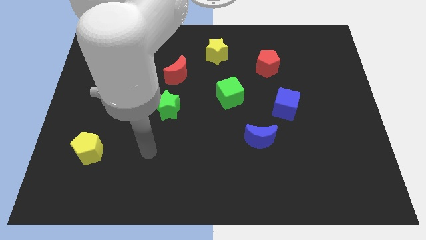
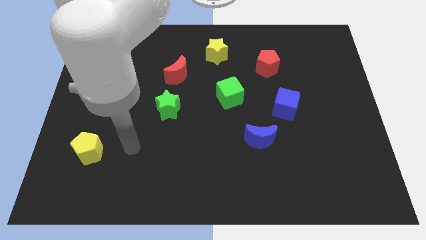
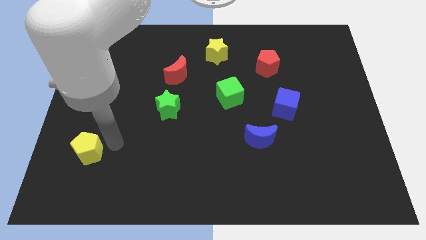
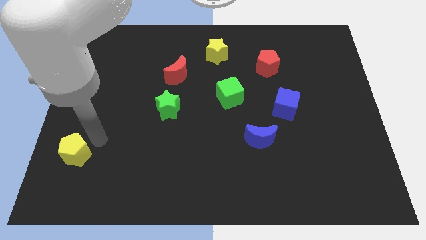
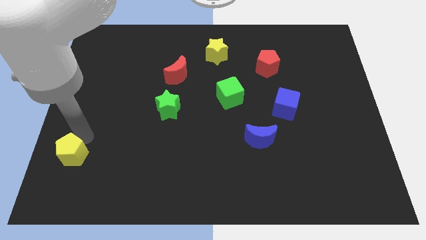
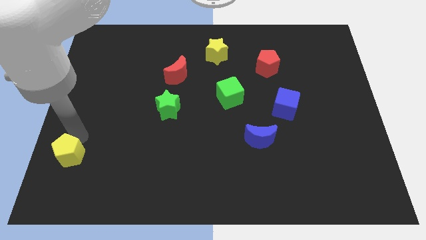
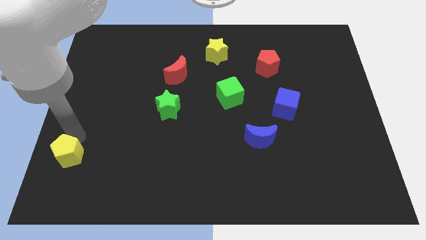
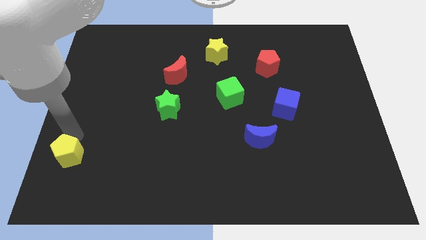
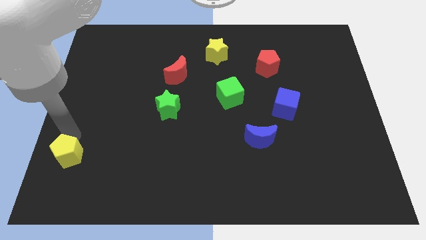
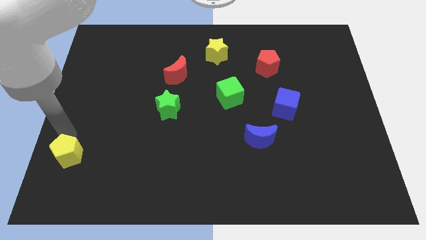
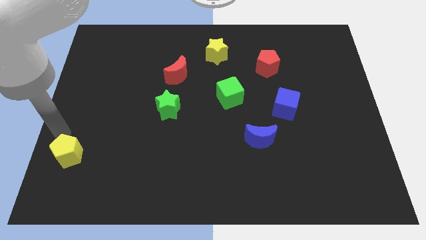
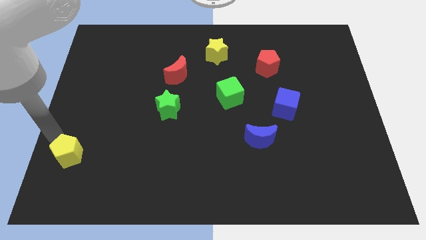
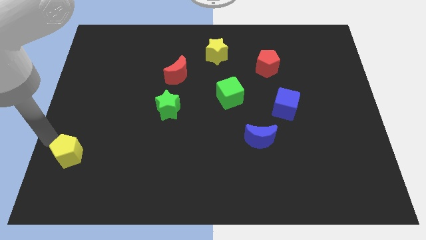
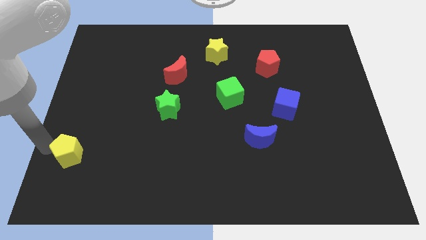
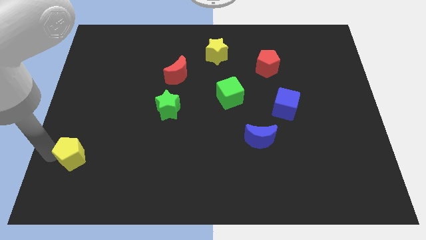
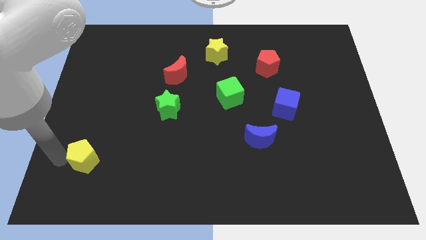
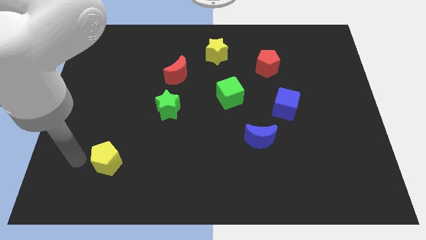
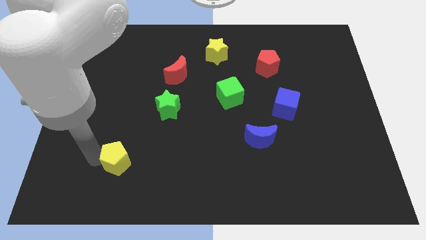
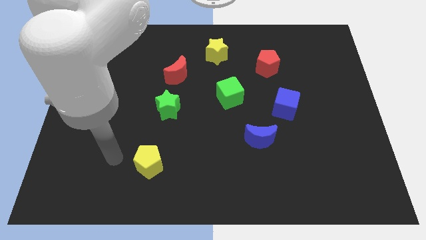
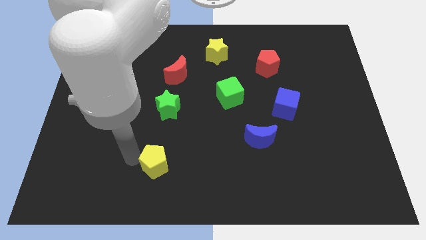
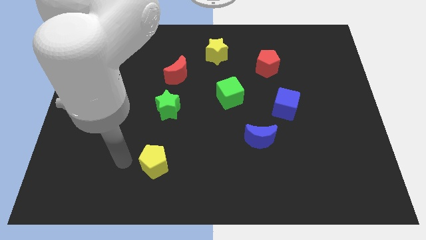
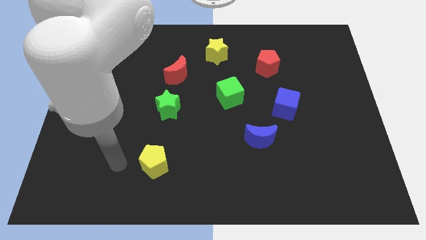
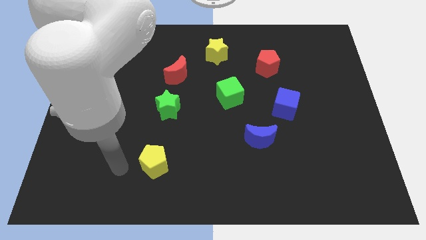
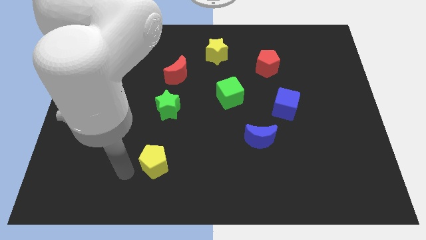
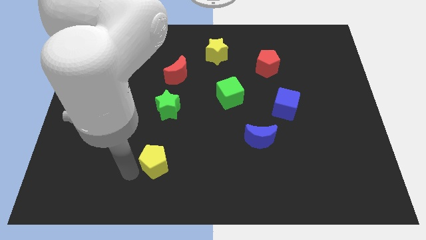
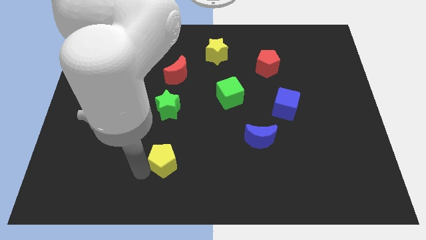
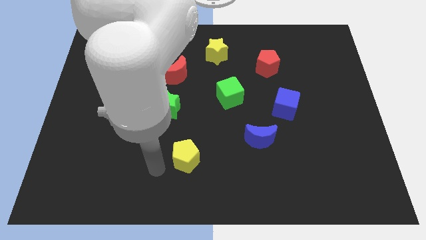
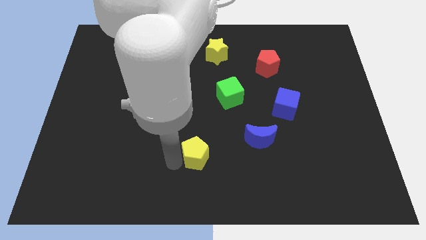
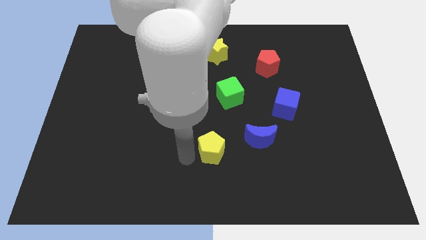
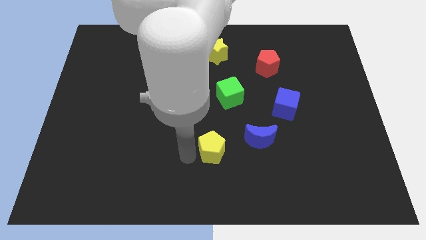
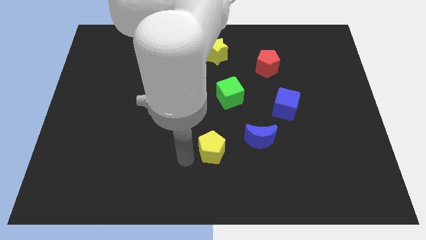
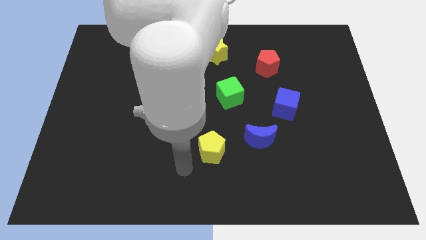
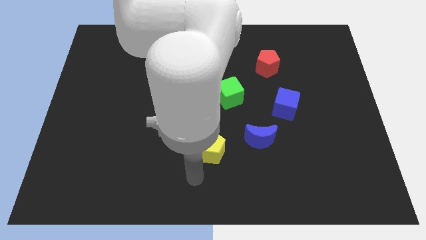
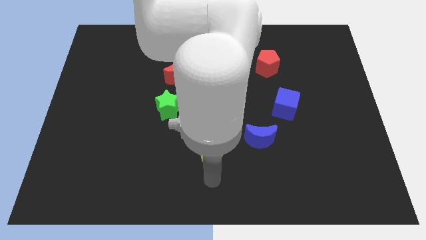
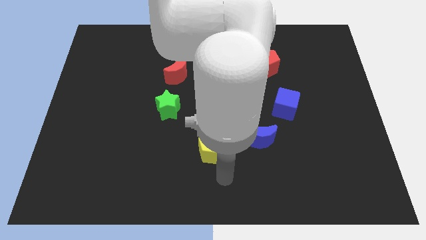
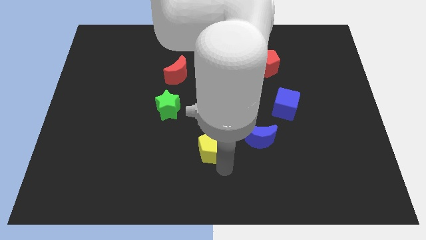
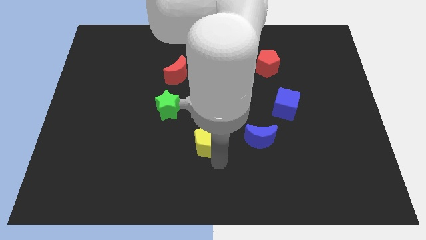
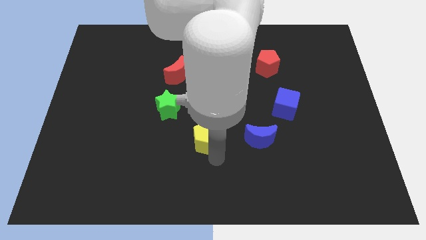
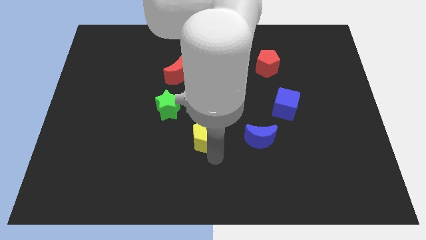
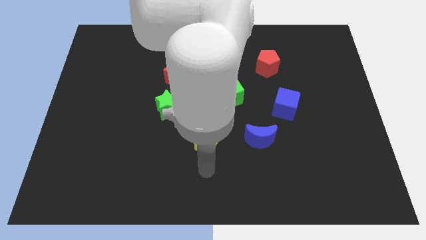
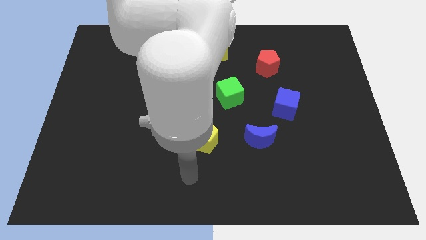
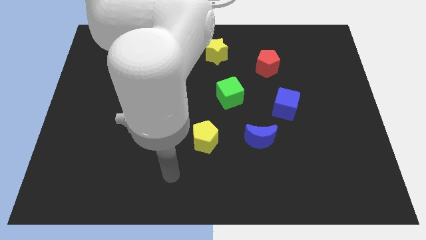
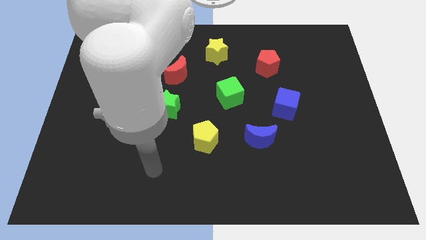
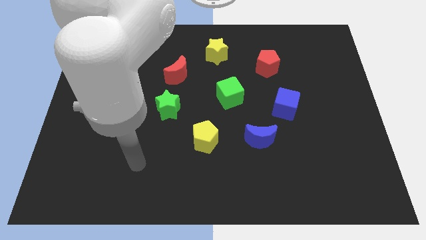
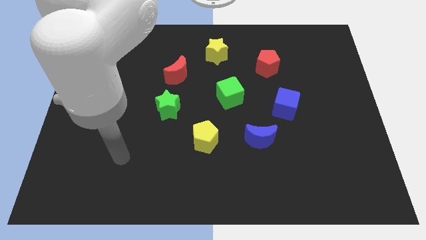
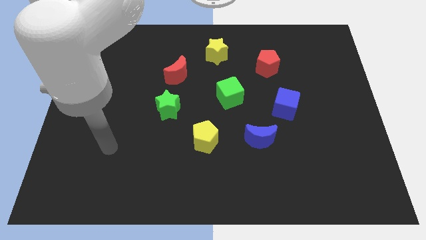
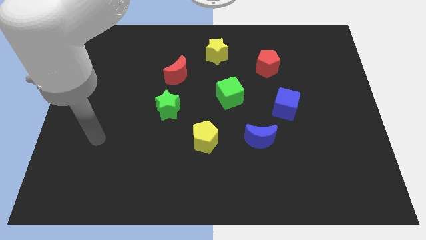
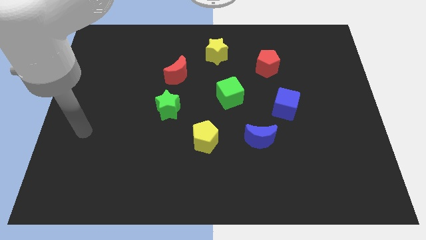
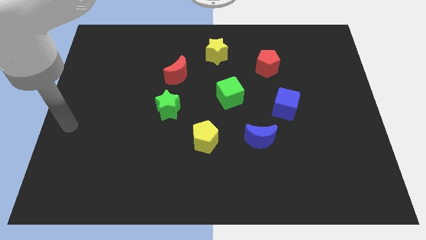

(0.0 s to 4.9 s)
place the yellow pentagon at the bottom right side of the green star

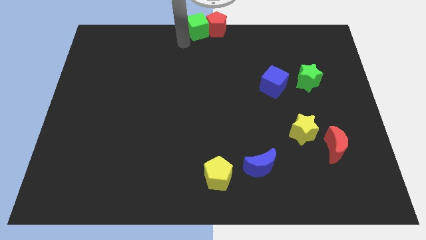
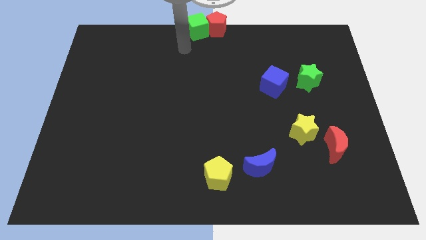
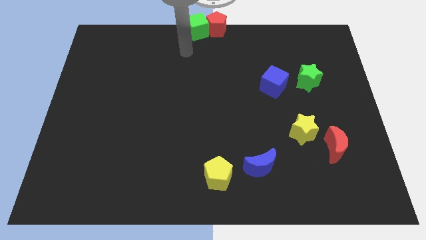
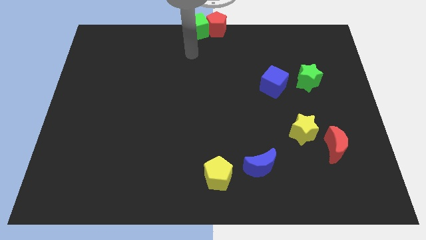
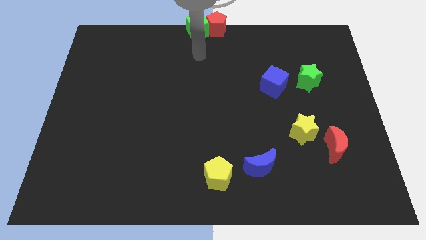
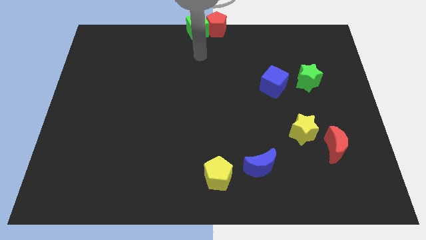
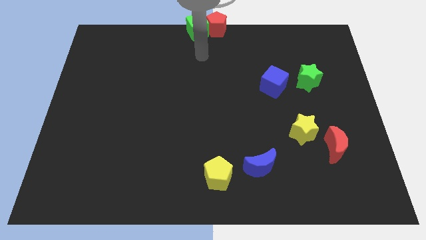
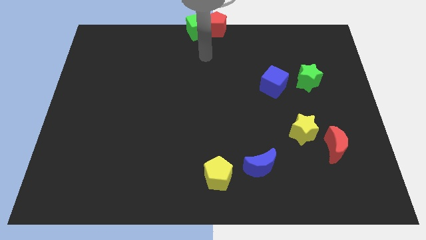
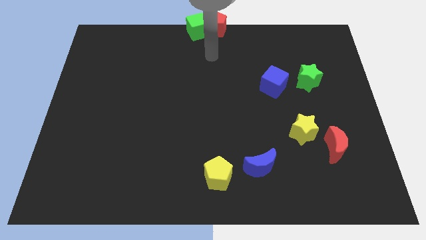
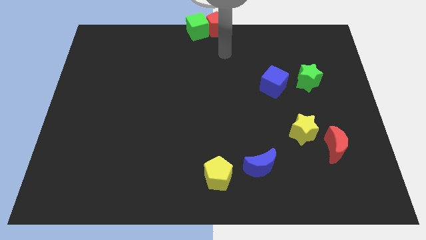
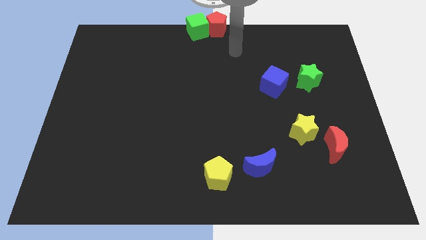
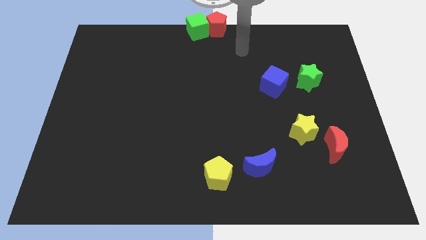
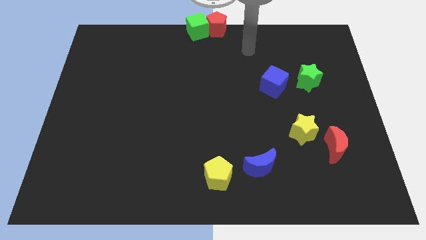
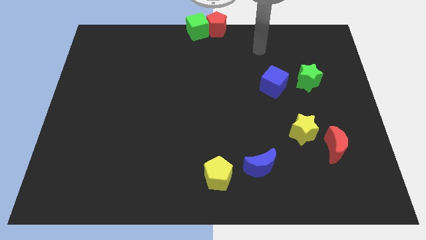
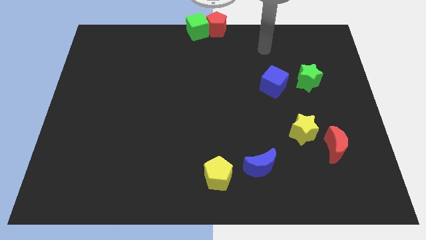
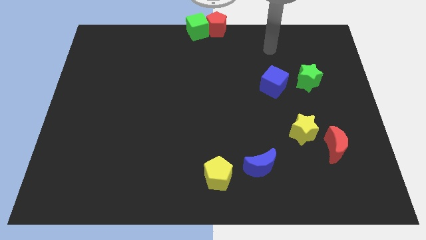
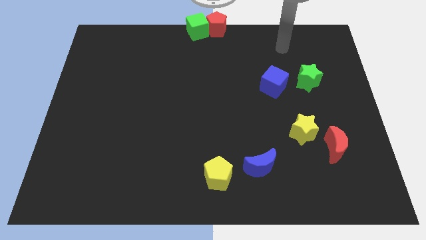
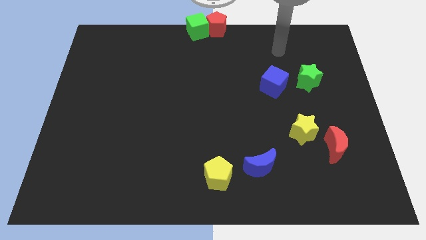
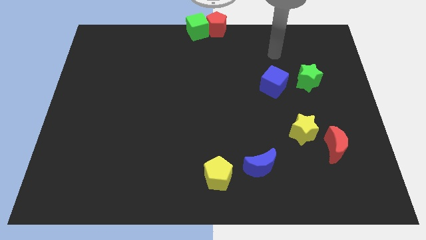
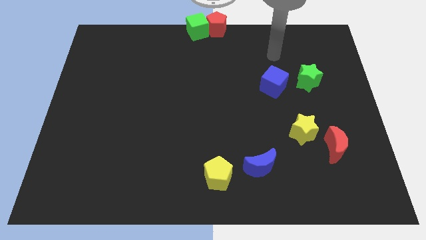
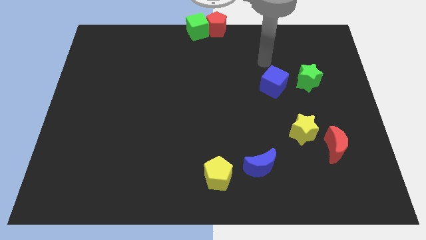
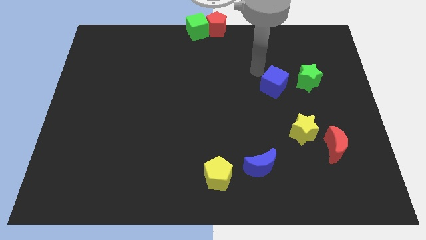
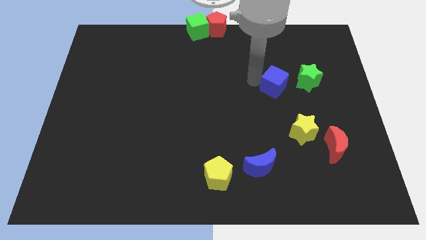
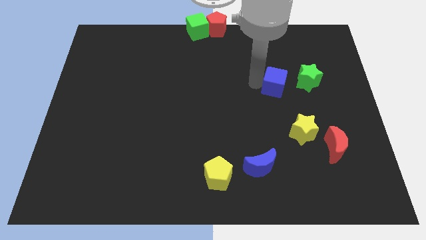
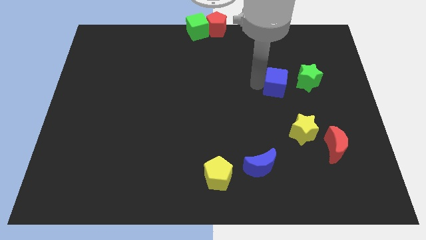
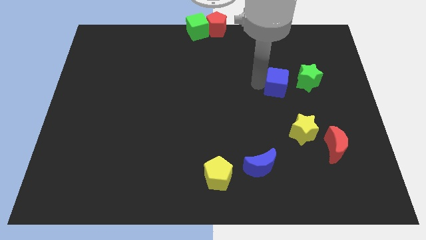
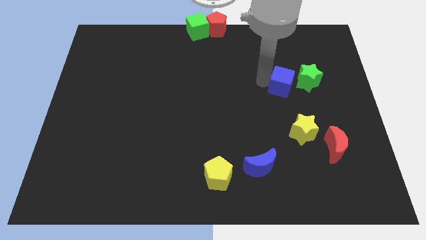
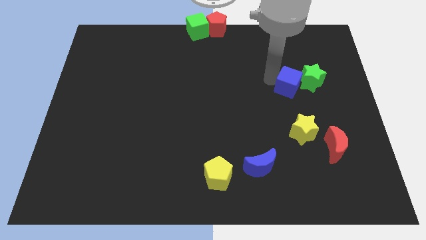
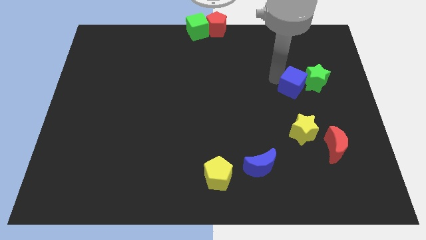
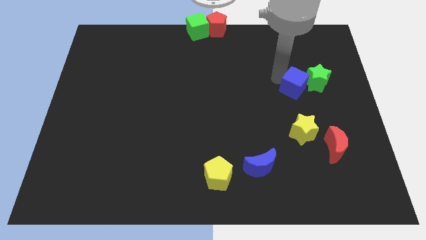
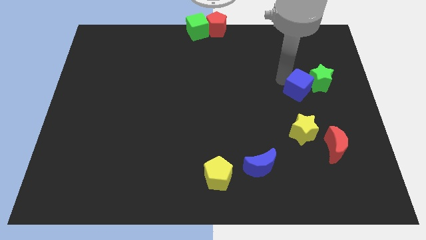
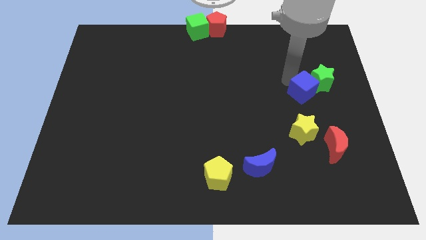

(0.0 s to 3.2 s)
drag blue cube towards right

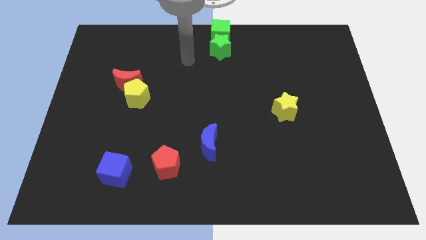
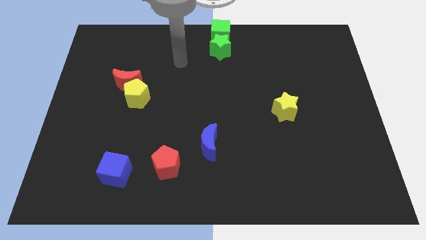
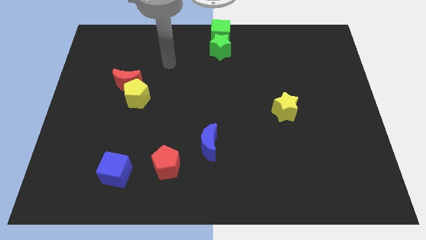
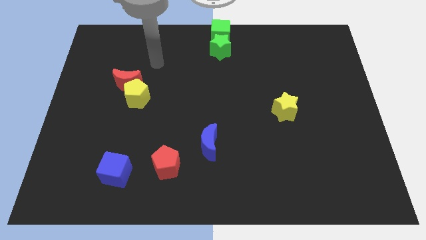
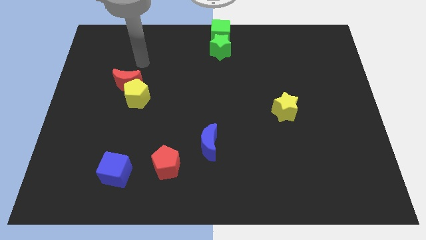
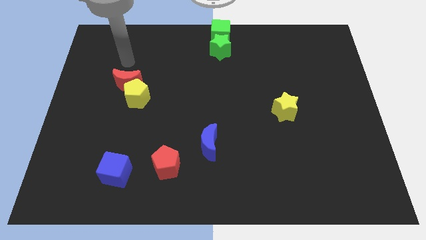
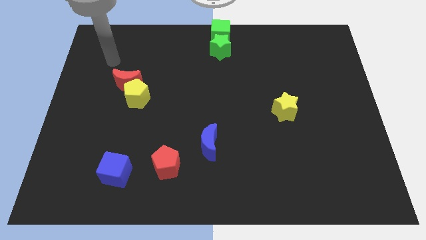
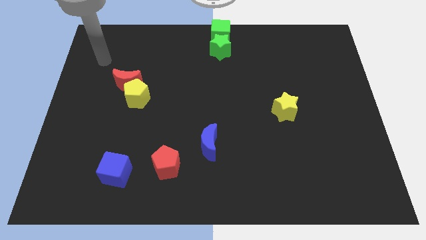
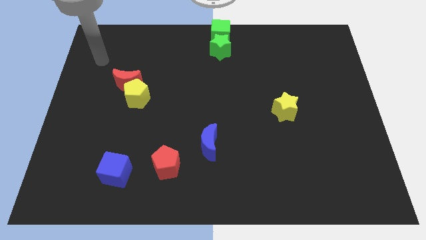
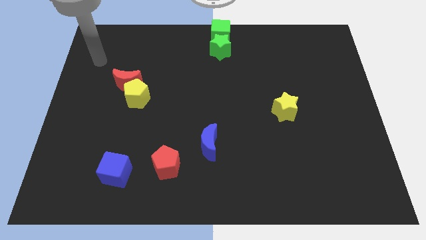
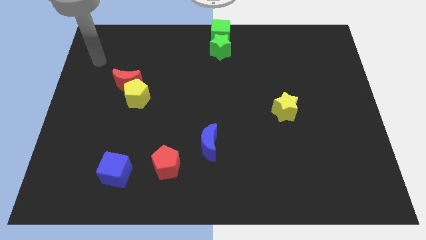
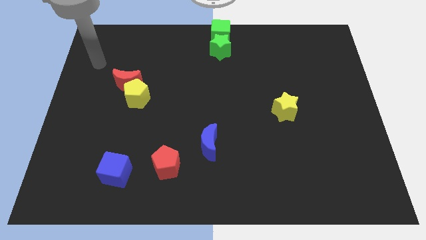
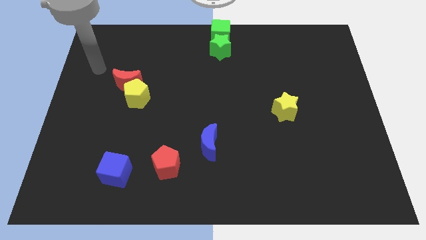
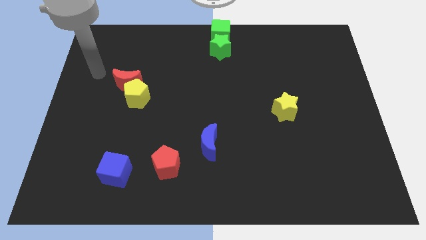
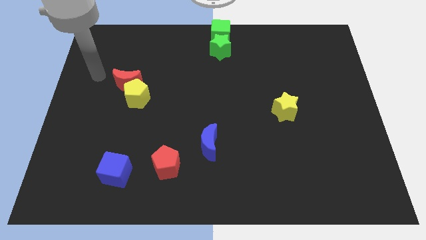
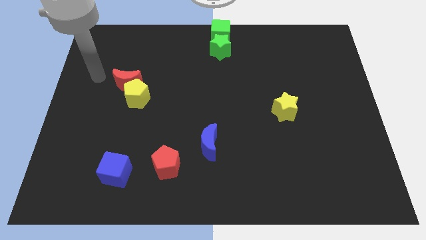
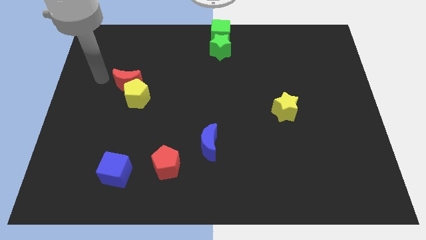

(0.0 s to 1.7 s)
point the arm to the left of the red moon
